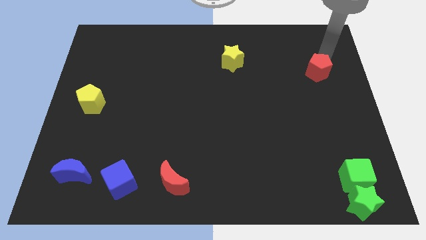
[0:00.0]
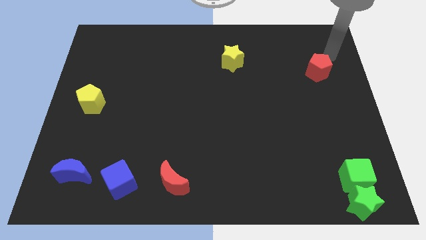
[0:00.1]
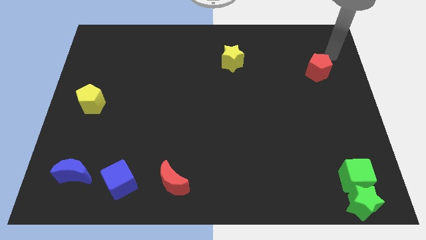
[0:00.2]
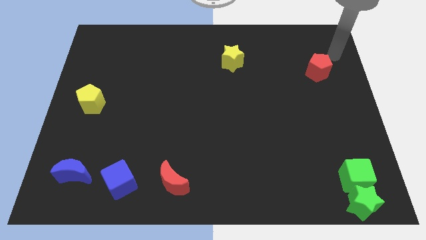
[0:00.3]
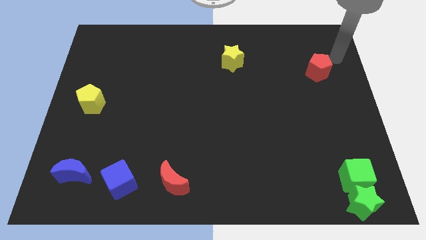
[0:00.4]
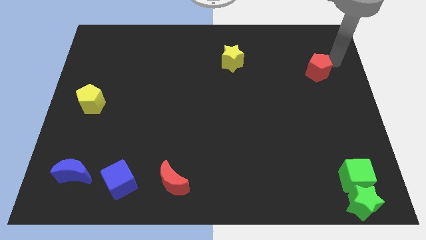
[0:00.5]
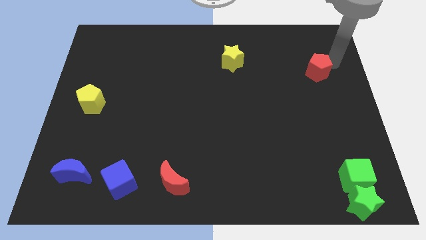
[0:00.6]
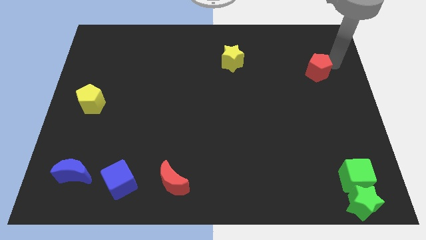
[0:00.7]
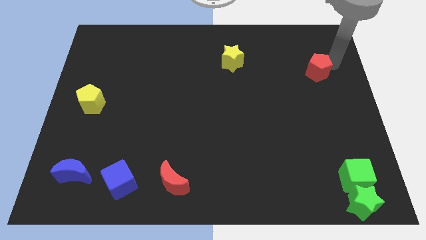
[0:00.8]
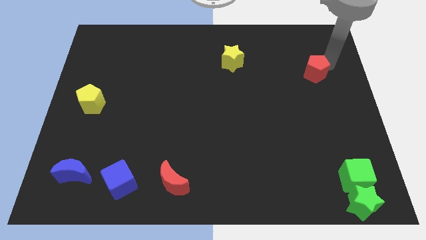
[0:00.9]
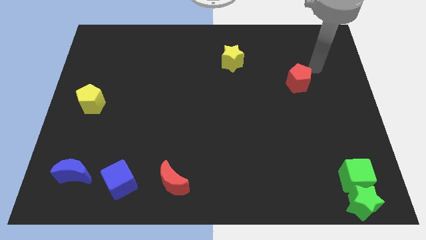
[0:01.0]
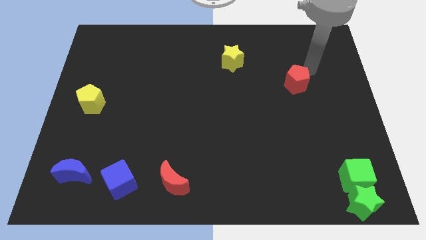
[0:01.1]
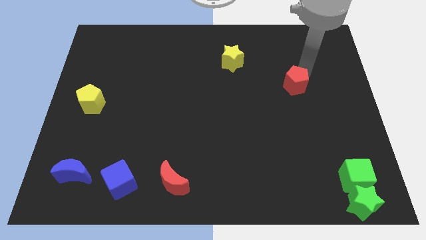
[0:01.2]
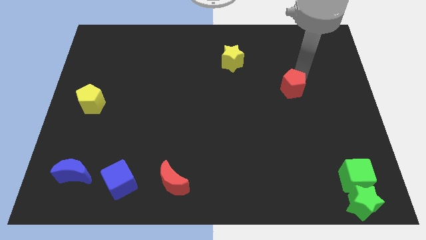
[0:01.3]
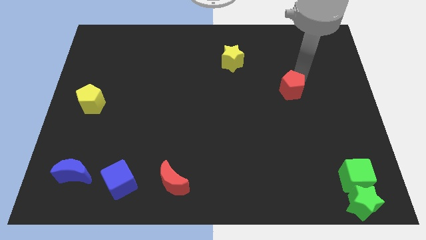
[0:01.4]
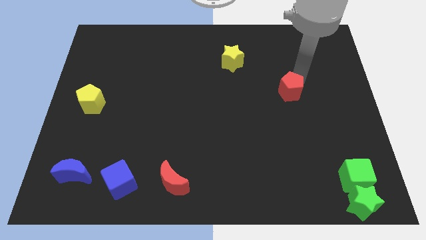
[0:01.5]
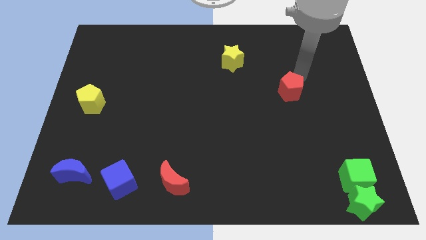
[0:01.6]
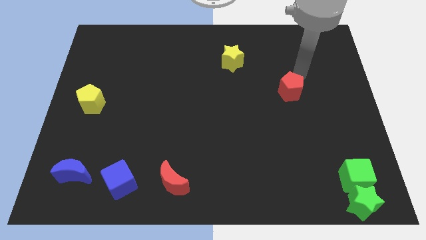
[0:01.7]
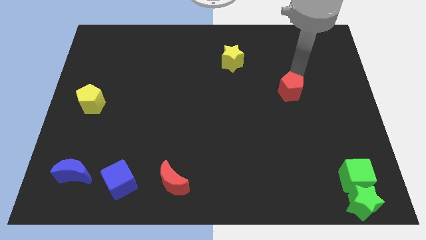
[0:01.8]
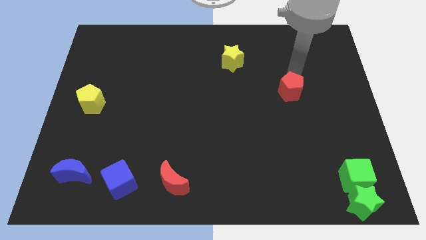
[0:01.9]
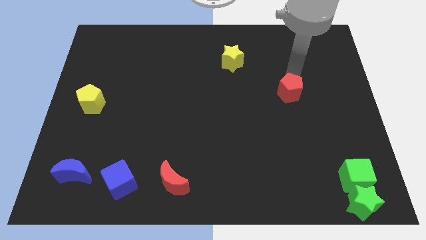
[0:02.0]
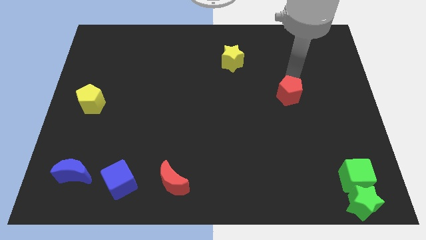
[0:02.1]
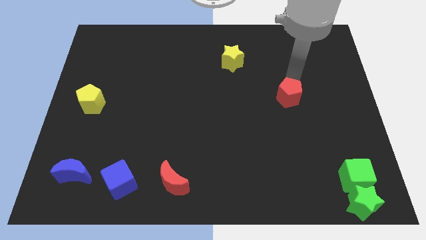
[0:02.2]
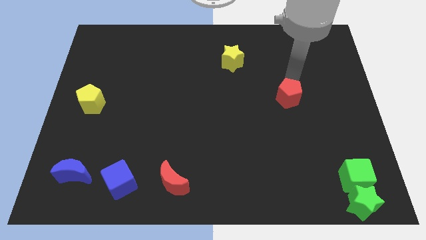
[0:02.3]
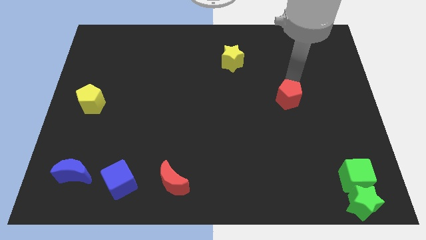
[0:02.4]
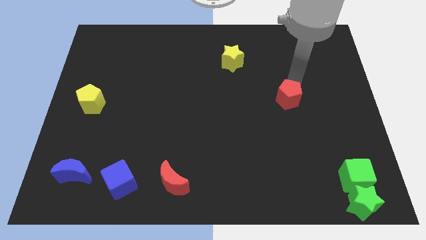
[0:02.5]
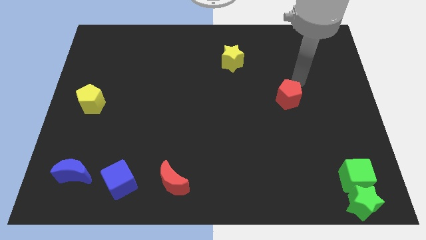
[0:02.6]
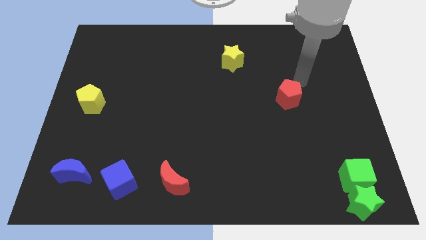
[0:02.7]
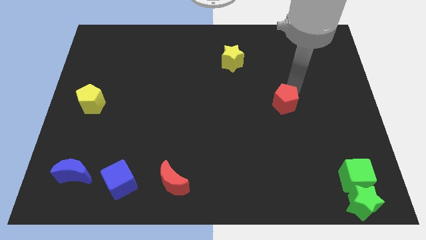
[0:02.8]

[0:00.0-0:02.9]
push the red pentagon to the horizontal right of the yellow pentagon

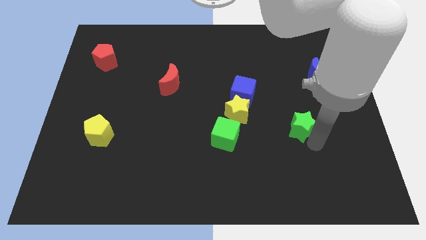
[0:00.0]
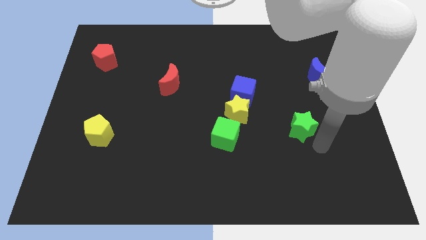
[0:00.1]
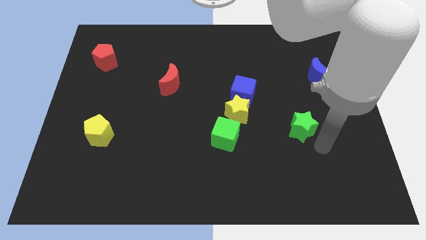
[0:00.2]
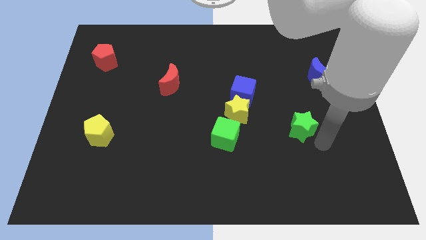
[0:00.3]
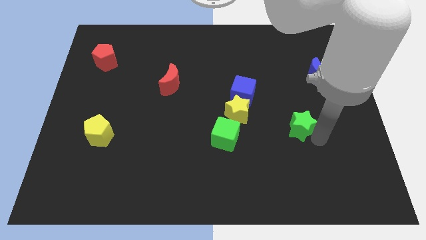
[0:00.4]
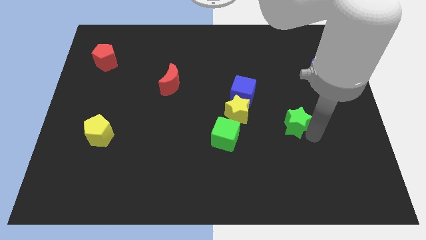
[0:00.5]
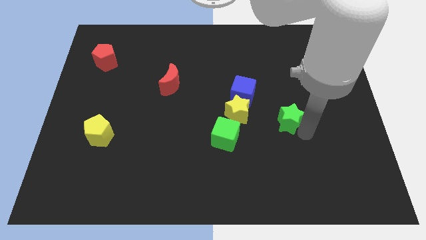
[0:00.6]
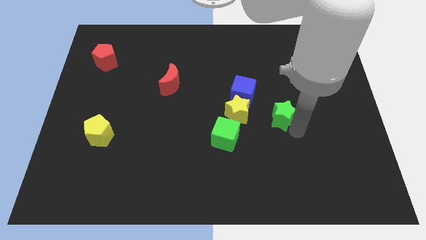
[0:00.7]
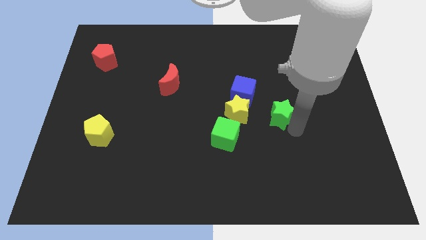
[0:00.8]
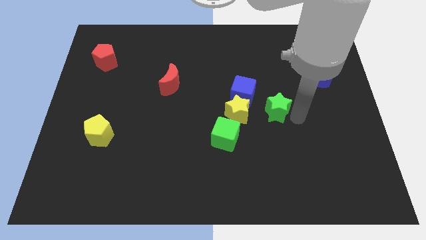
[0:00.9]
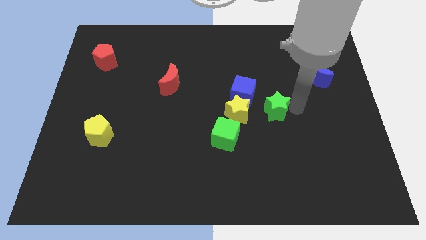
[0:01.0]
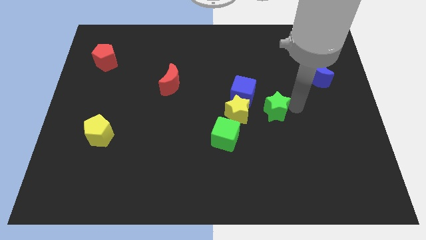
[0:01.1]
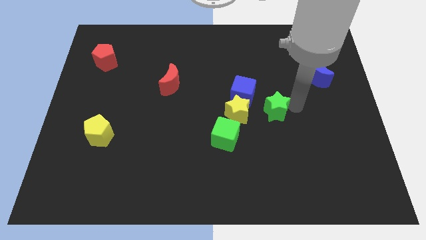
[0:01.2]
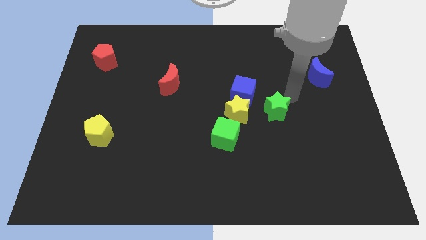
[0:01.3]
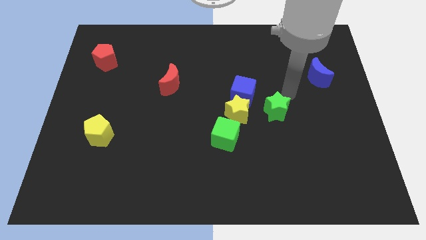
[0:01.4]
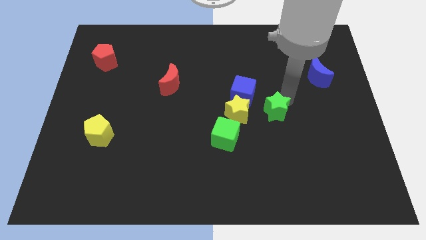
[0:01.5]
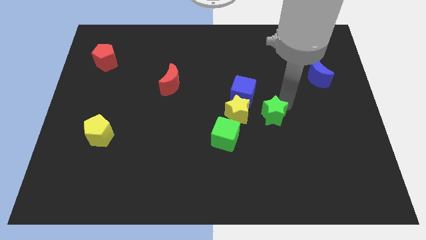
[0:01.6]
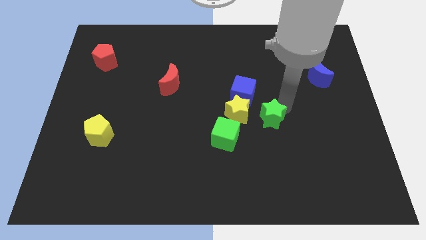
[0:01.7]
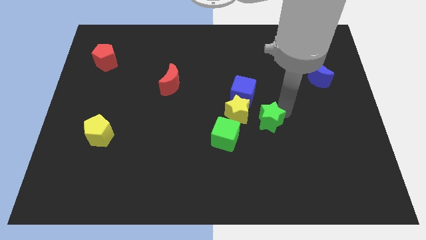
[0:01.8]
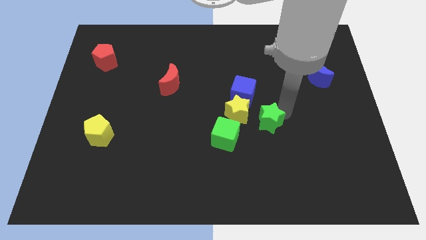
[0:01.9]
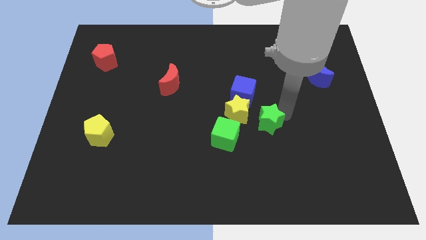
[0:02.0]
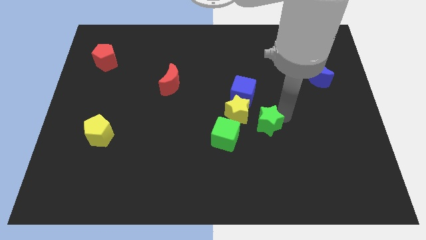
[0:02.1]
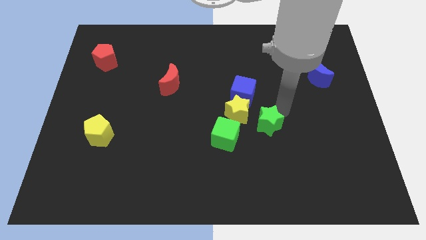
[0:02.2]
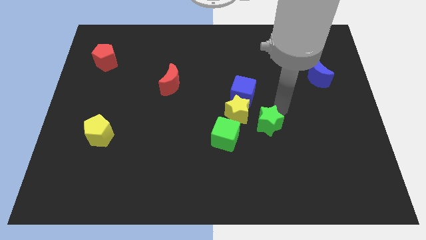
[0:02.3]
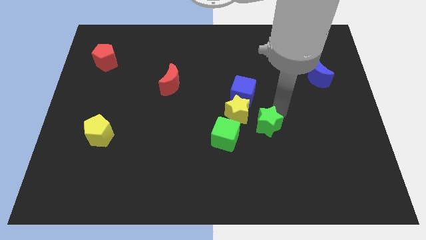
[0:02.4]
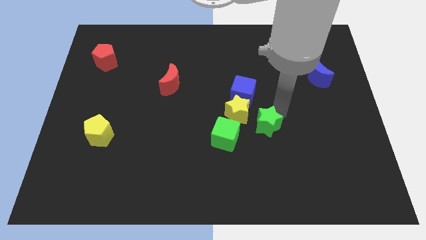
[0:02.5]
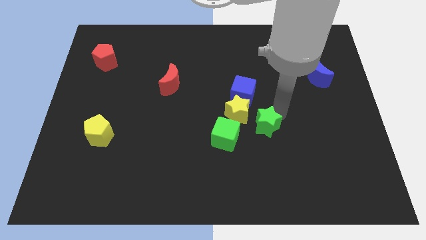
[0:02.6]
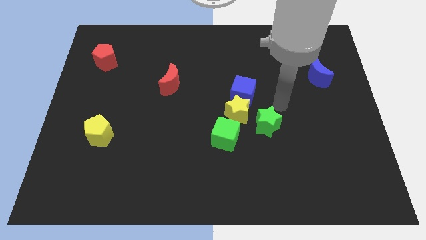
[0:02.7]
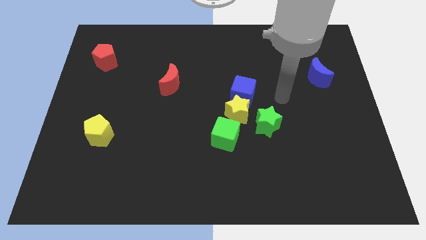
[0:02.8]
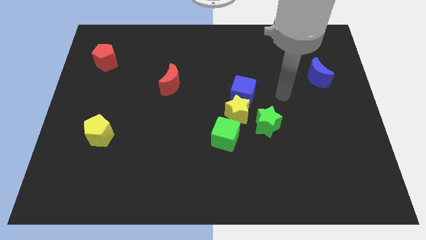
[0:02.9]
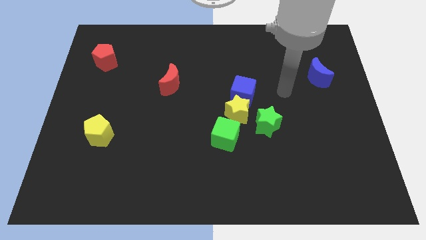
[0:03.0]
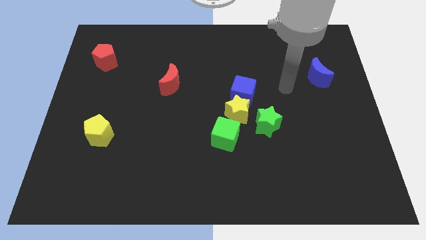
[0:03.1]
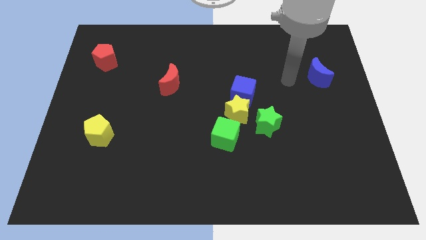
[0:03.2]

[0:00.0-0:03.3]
place the green star right to the yellow star

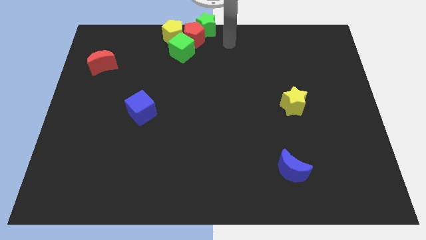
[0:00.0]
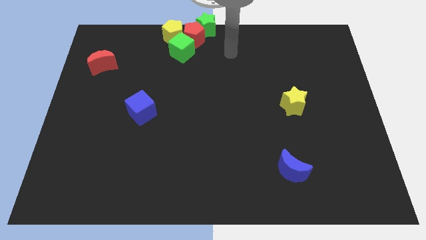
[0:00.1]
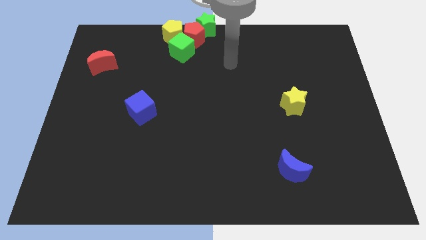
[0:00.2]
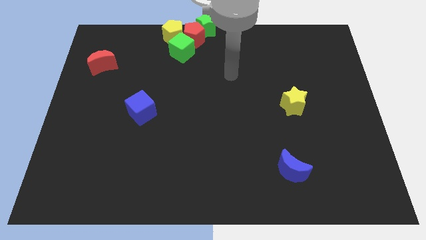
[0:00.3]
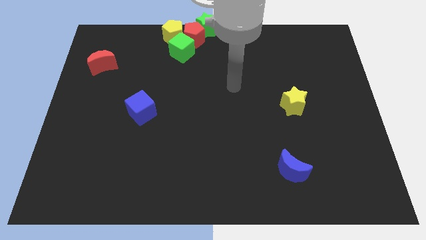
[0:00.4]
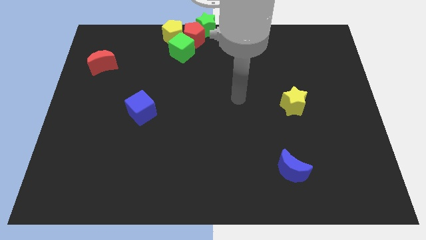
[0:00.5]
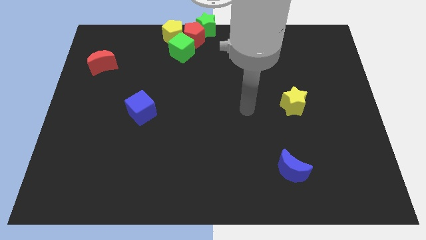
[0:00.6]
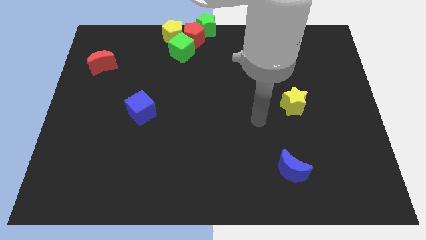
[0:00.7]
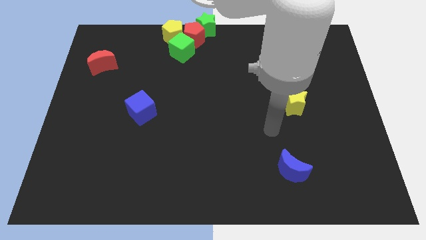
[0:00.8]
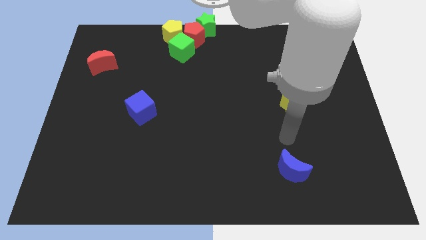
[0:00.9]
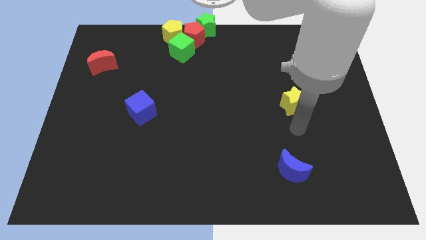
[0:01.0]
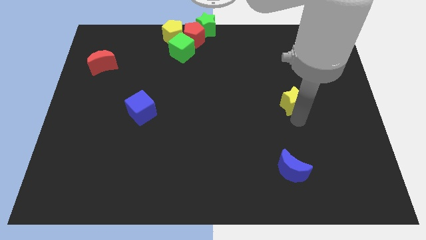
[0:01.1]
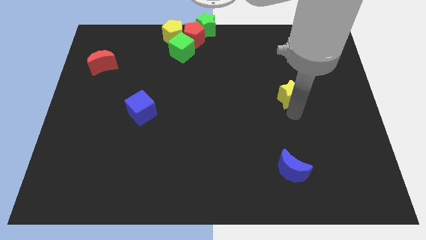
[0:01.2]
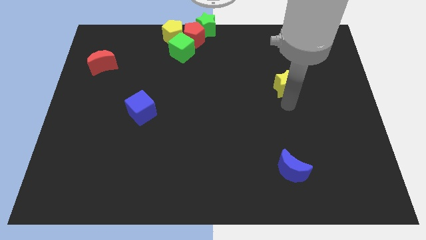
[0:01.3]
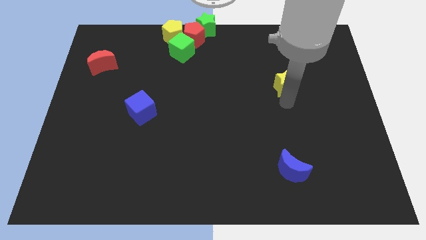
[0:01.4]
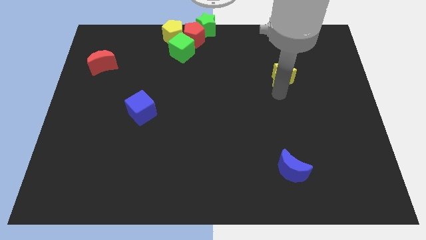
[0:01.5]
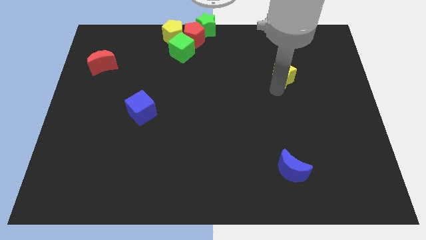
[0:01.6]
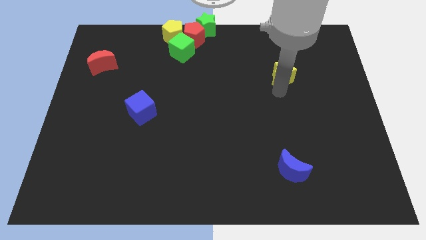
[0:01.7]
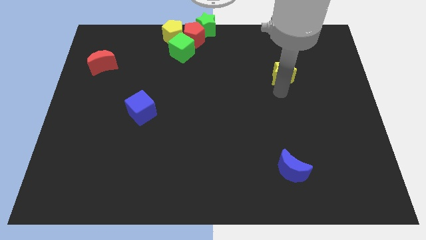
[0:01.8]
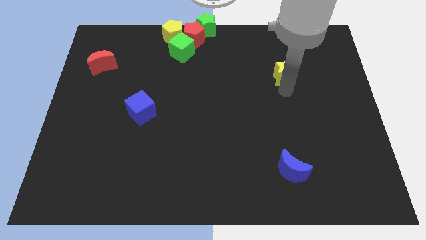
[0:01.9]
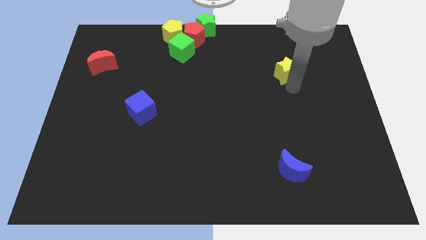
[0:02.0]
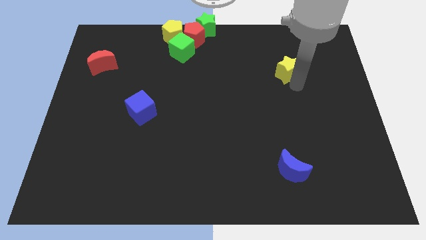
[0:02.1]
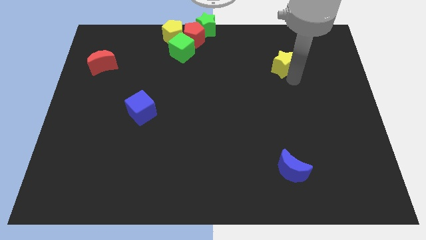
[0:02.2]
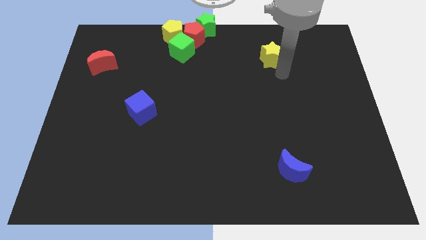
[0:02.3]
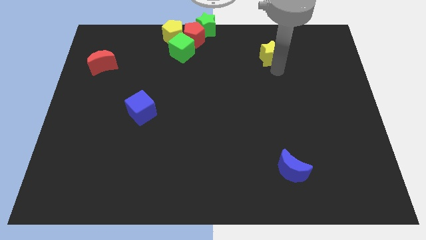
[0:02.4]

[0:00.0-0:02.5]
move the yellow star towards top side of the board
